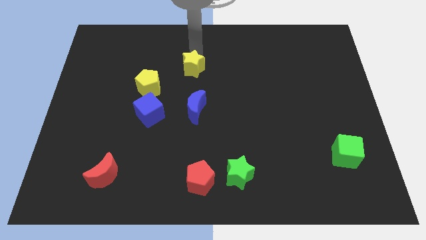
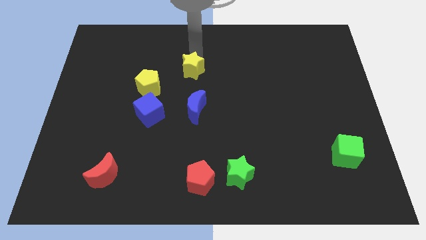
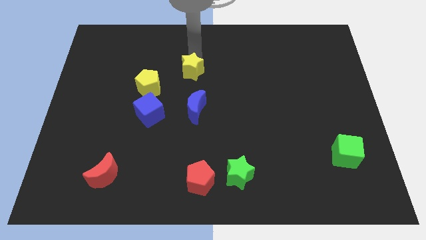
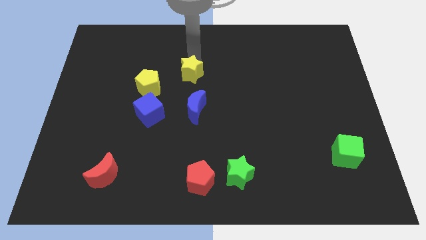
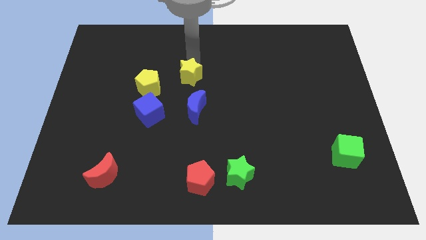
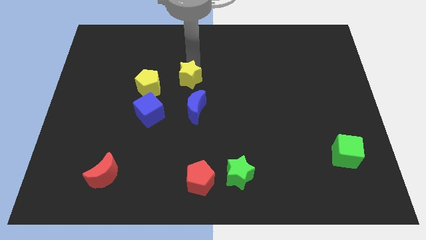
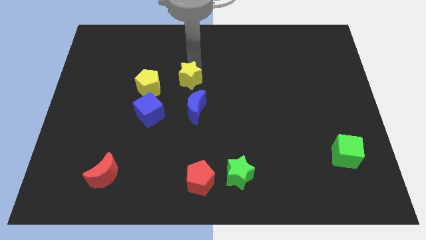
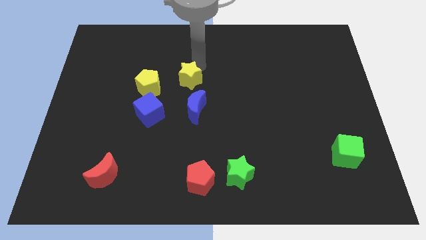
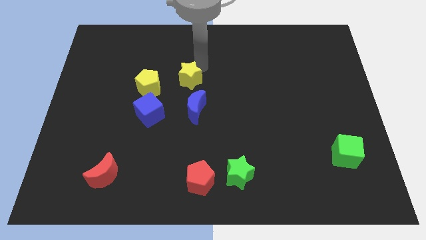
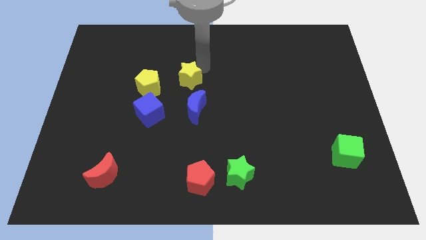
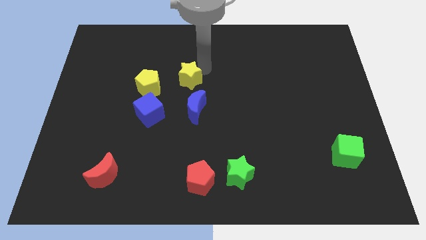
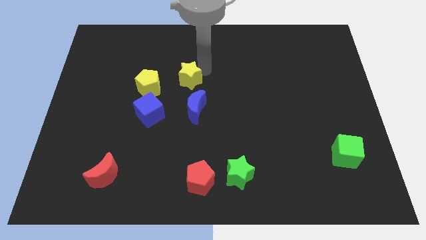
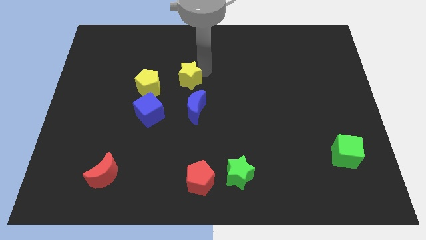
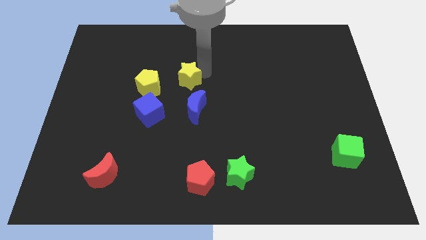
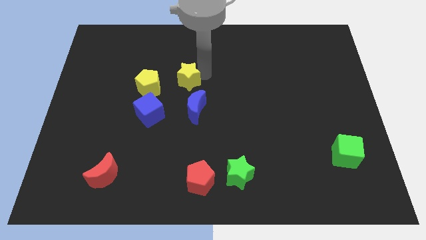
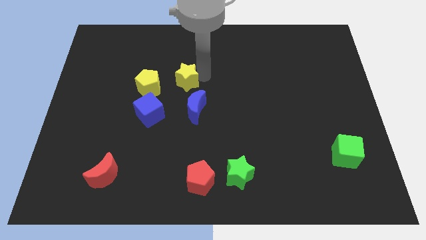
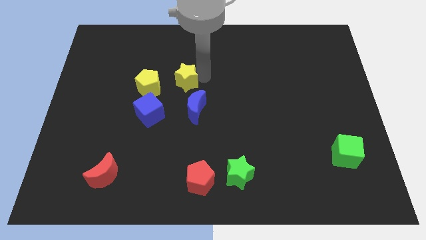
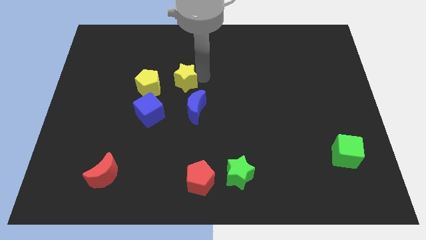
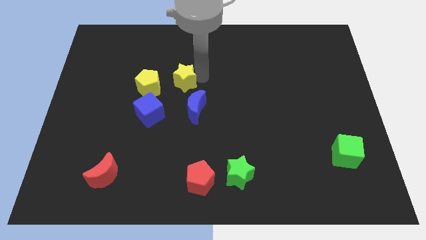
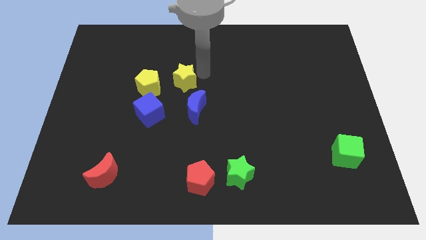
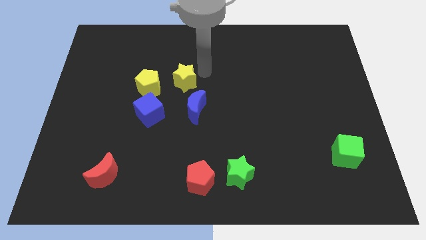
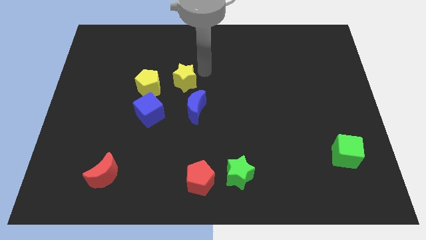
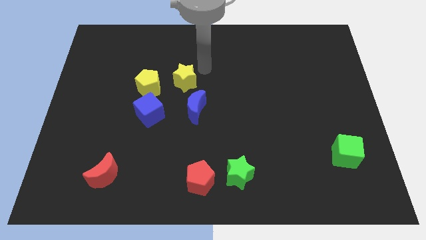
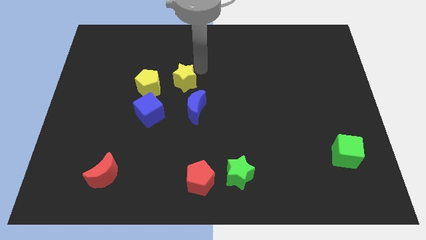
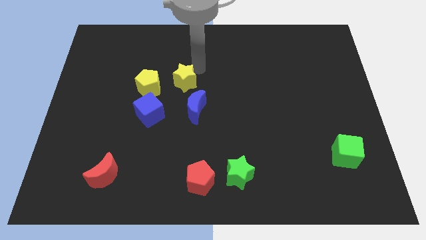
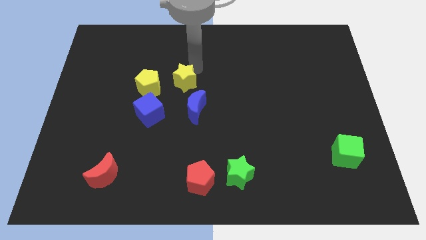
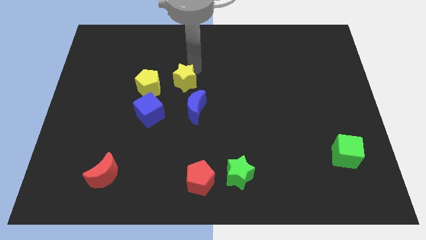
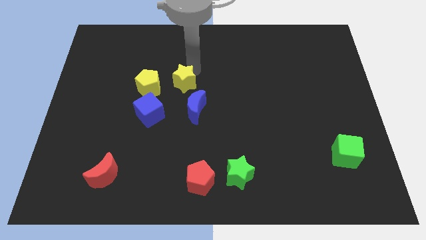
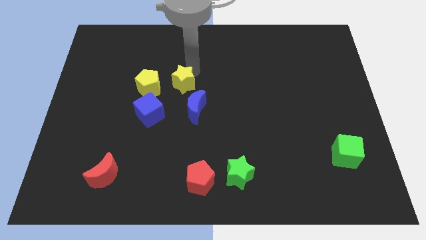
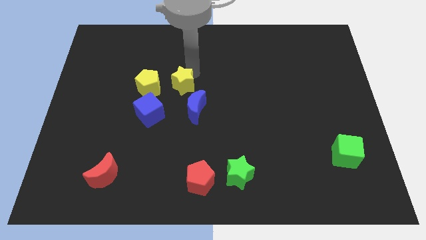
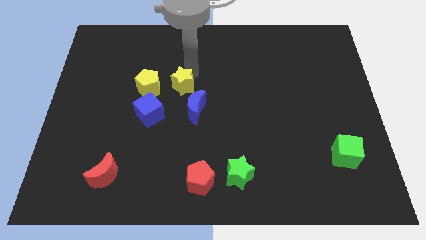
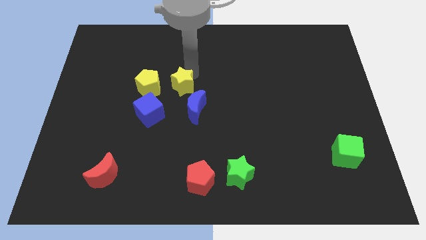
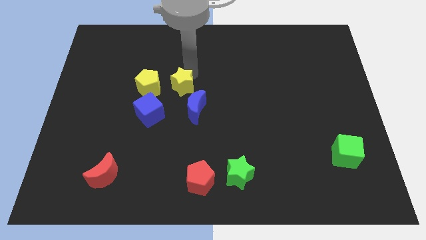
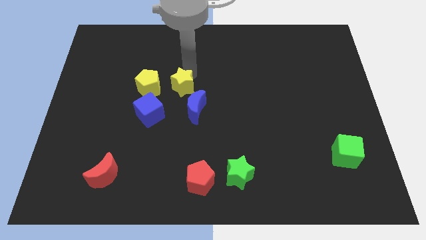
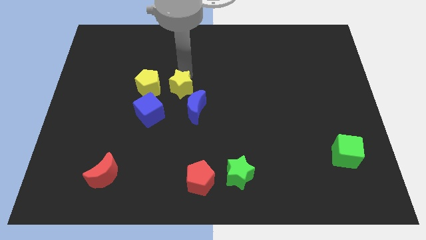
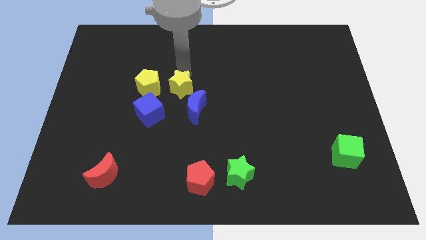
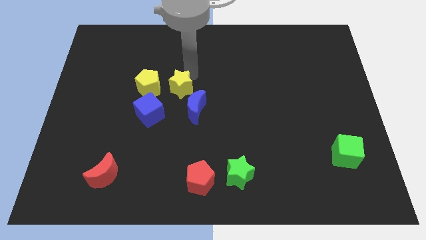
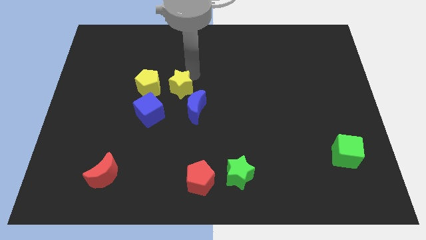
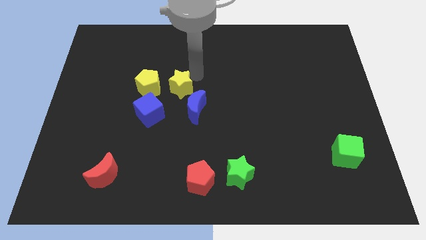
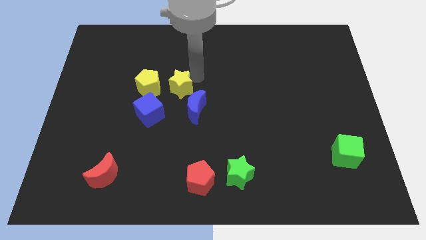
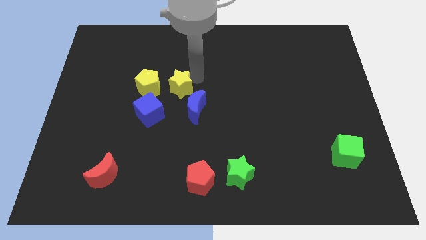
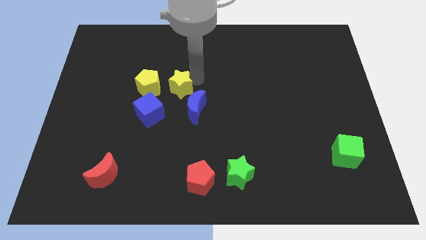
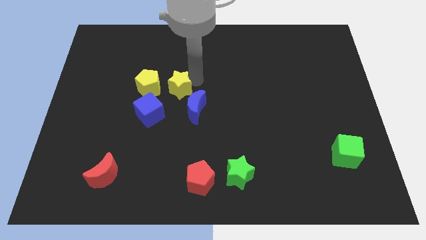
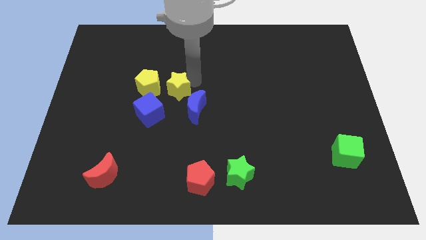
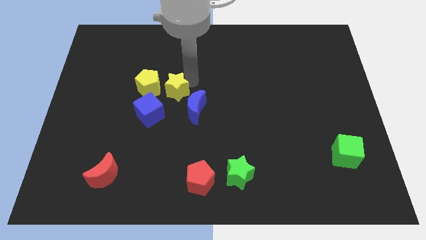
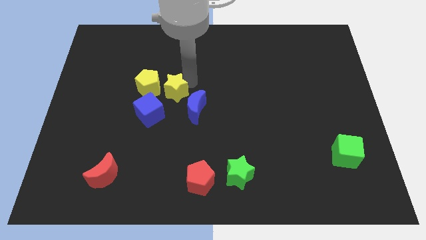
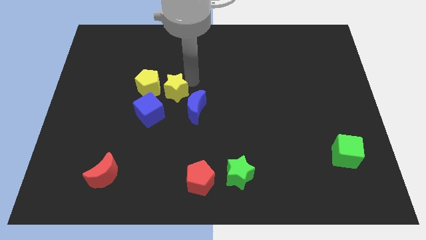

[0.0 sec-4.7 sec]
place yellow star above blue crescent

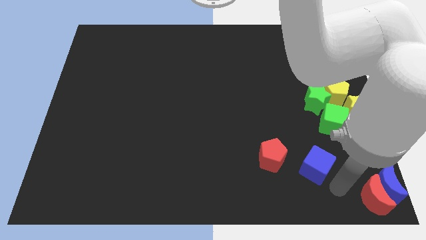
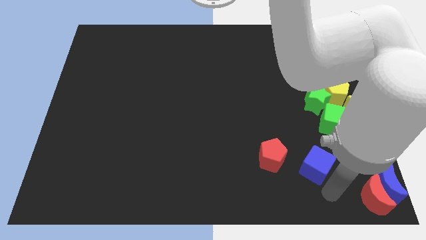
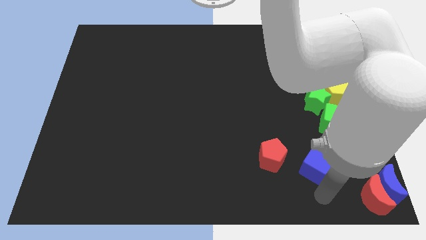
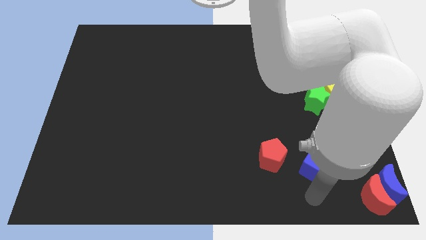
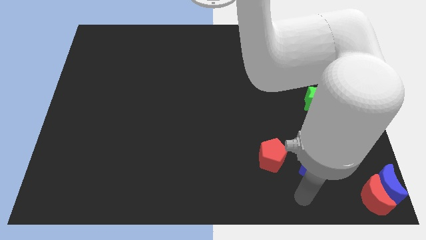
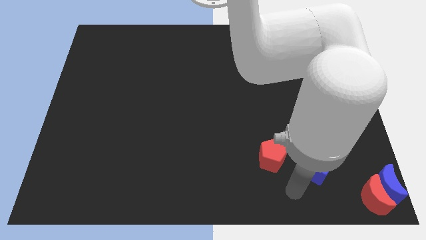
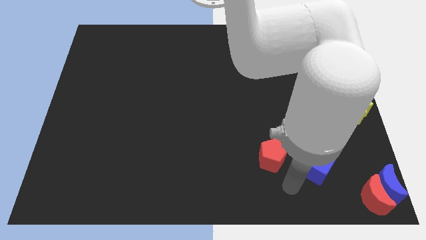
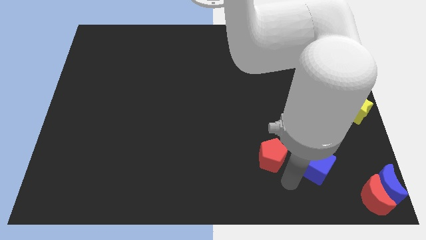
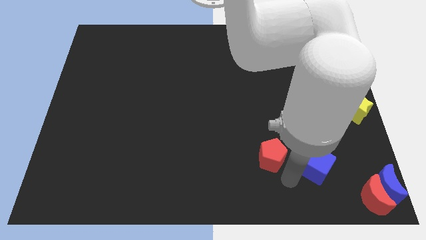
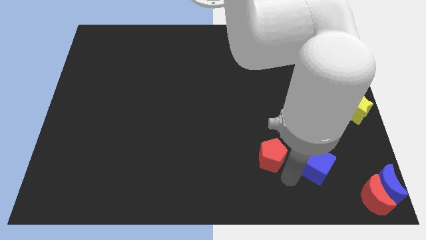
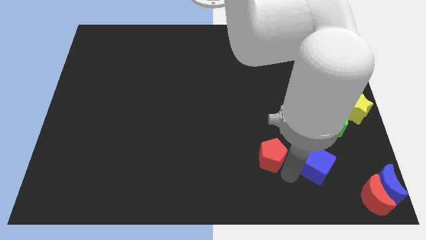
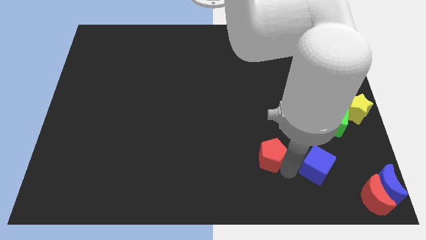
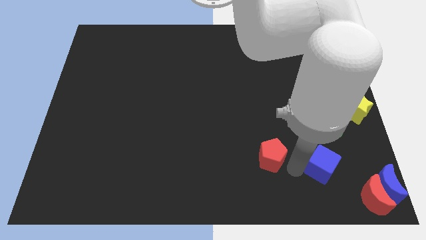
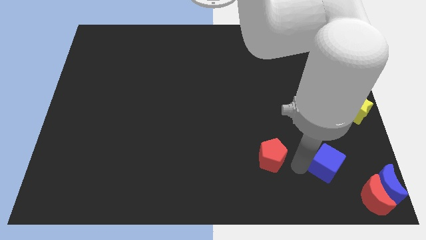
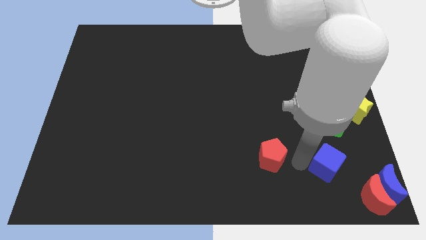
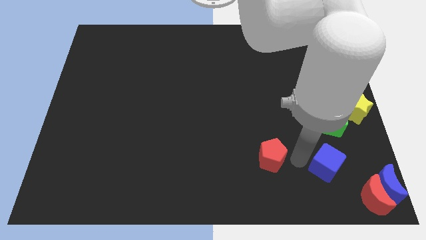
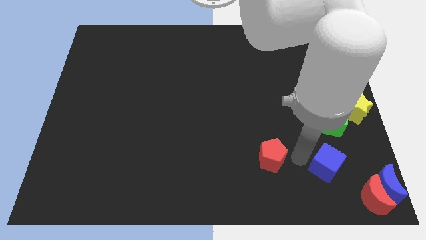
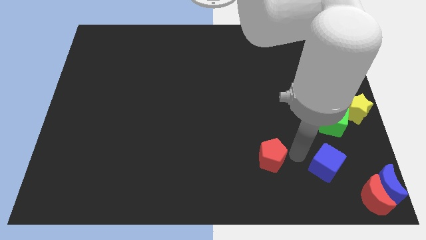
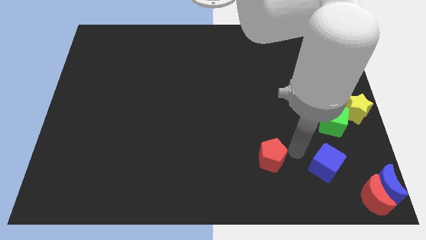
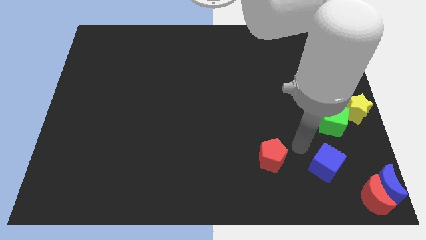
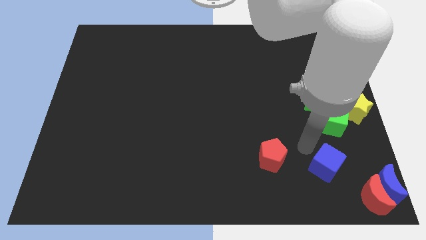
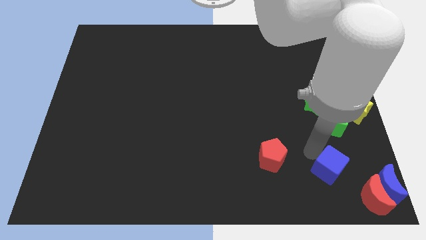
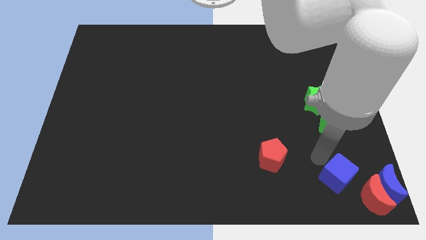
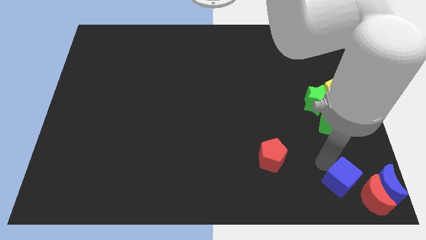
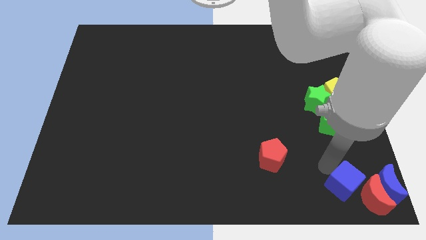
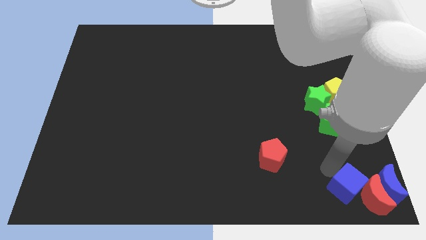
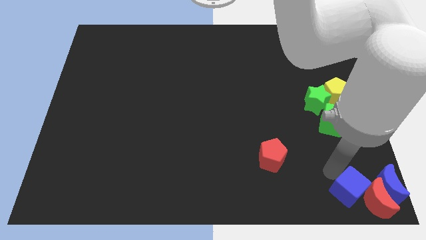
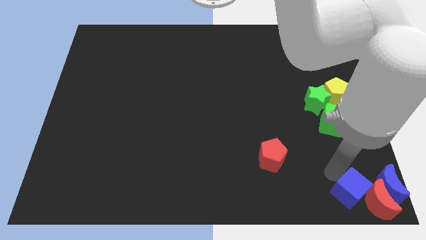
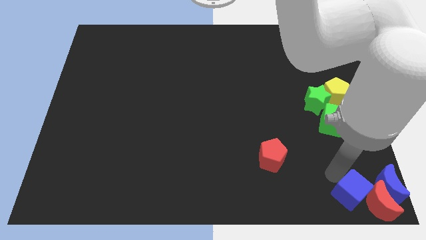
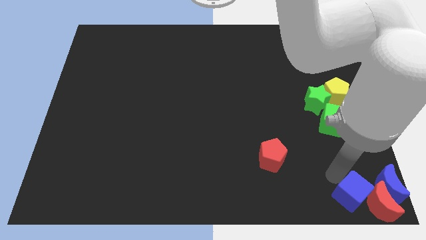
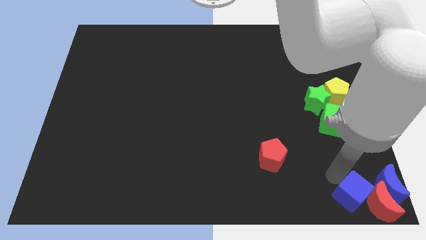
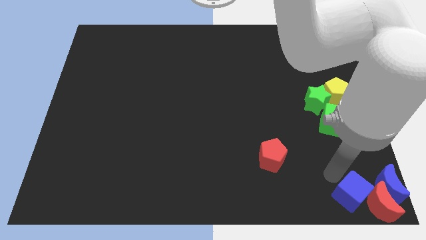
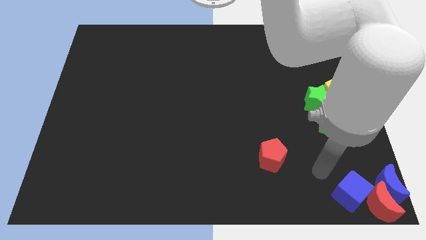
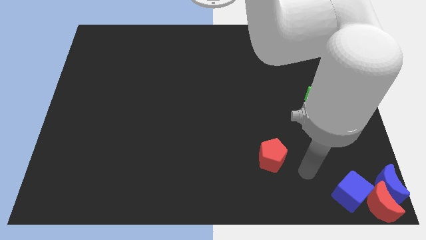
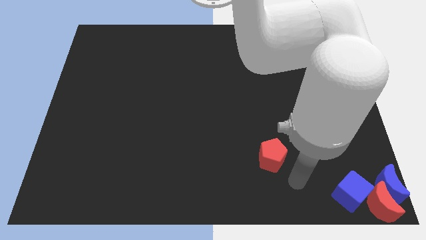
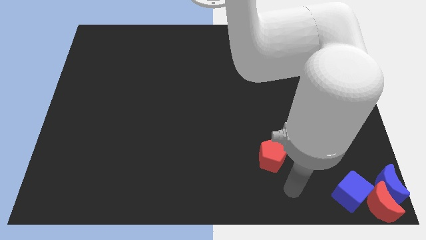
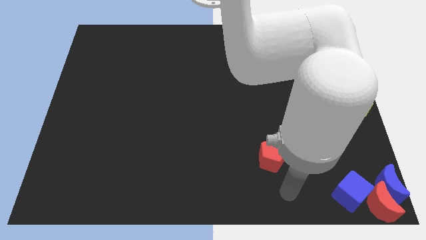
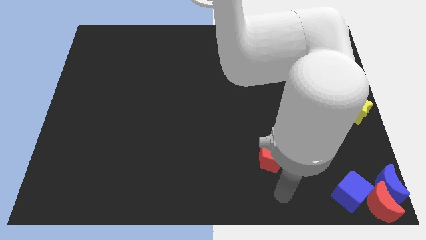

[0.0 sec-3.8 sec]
move blue cube above the red moon

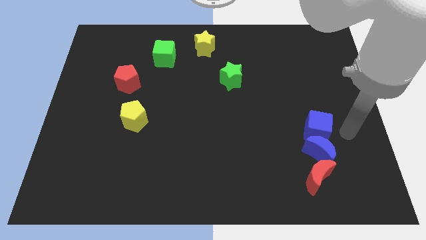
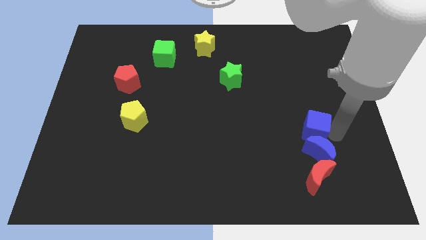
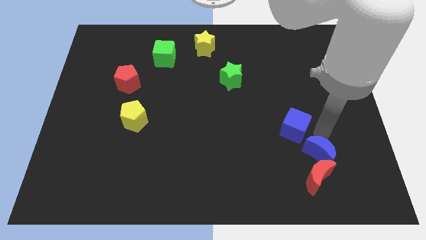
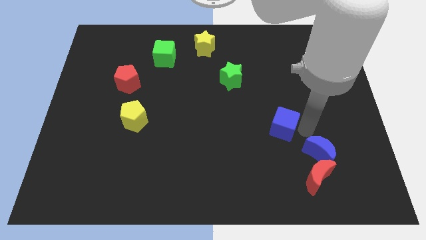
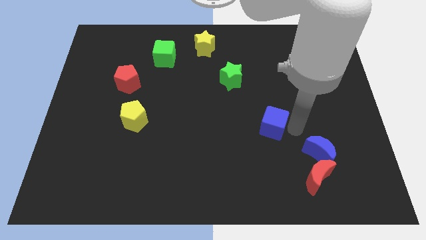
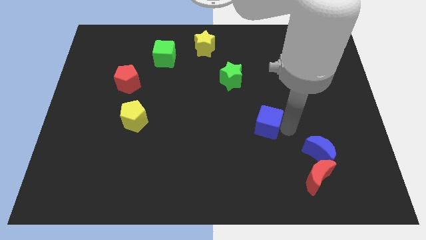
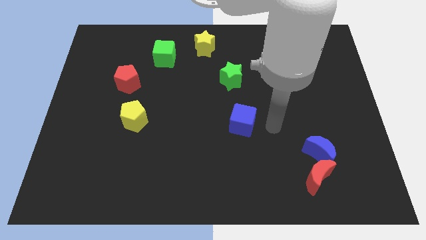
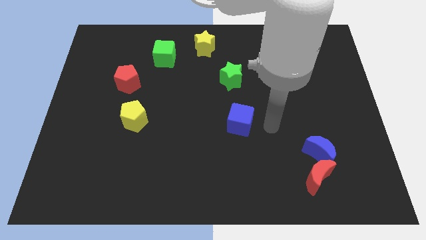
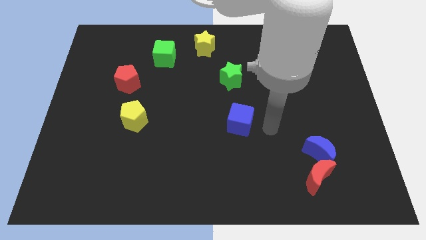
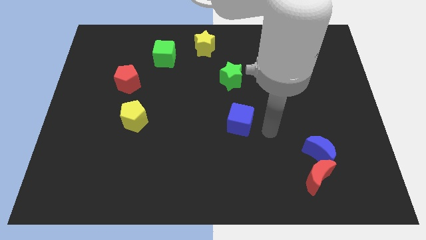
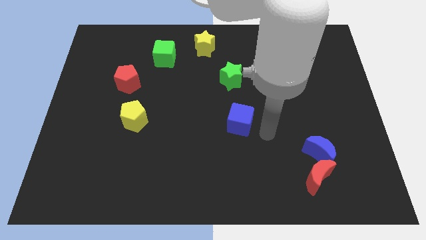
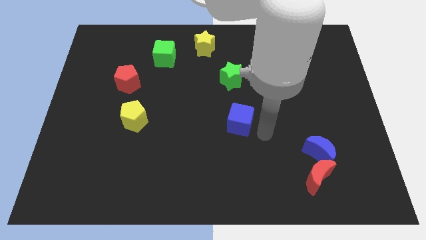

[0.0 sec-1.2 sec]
push the blue cube to the center
